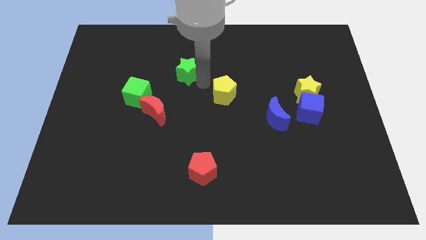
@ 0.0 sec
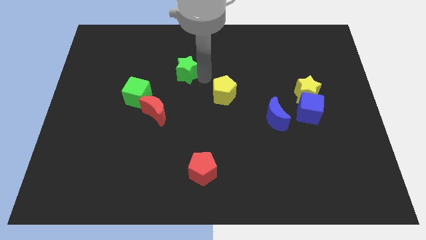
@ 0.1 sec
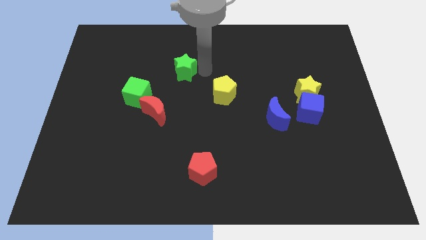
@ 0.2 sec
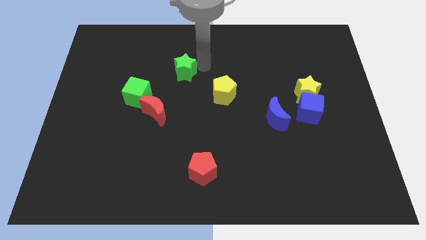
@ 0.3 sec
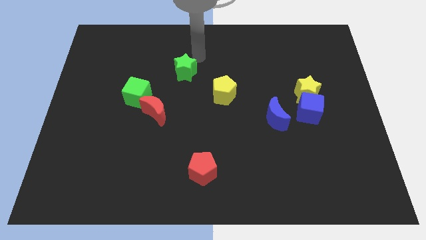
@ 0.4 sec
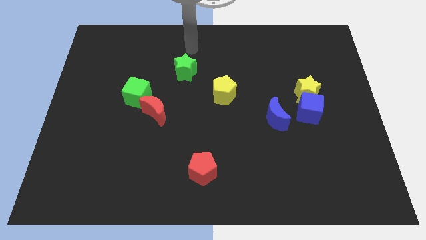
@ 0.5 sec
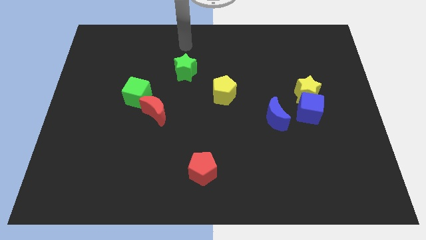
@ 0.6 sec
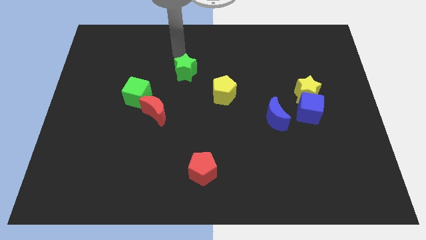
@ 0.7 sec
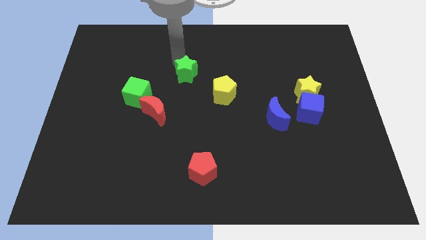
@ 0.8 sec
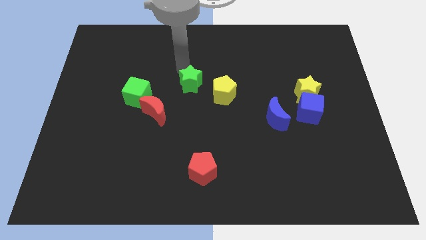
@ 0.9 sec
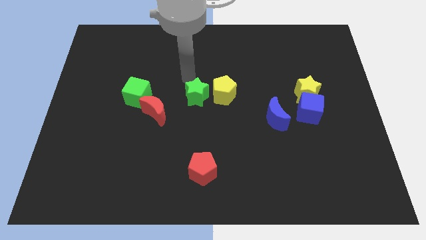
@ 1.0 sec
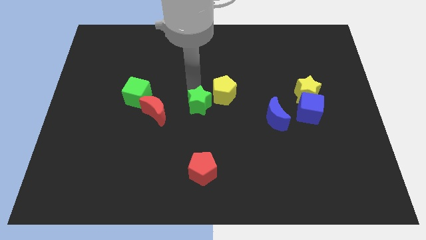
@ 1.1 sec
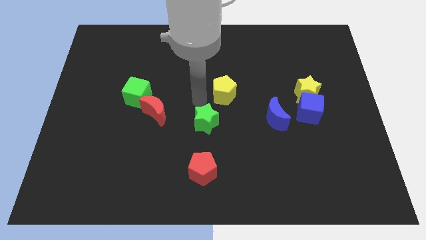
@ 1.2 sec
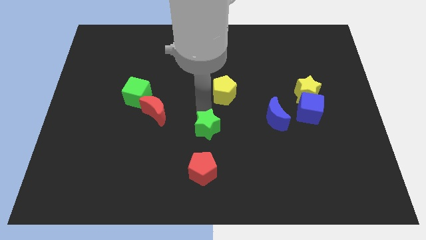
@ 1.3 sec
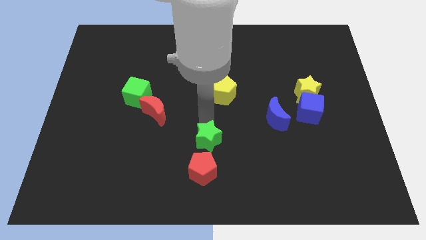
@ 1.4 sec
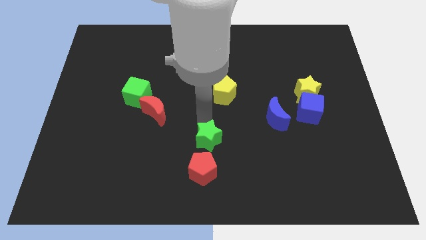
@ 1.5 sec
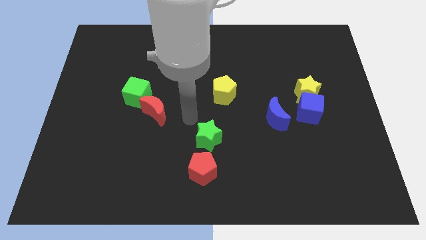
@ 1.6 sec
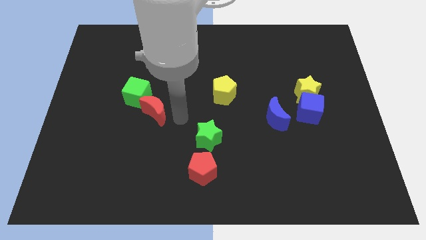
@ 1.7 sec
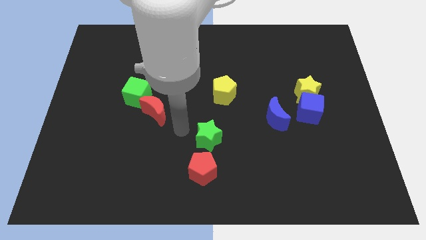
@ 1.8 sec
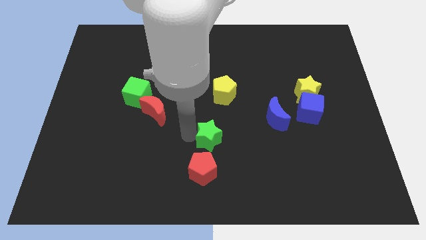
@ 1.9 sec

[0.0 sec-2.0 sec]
place green star above red pentagon

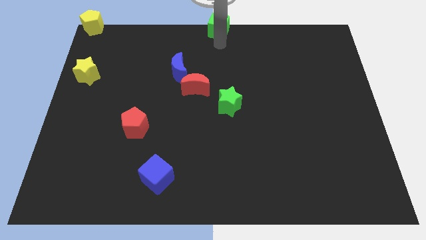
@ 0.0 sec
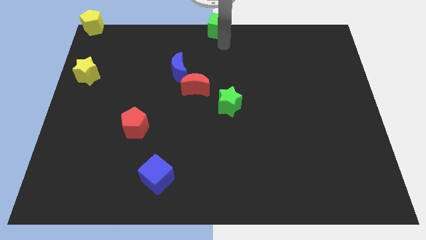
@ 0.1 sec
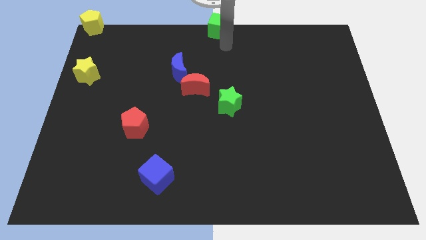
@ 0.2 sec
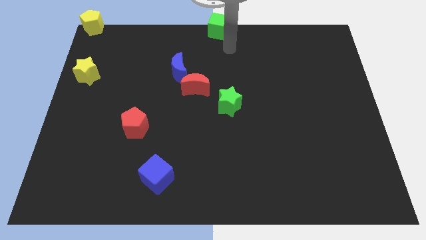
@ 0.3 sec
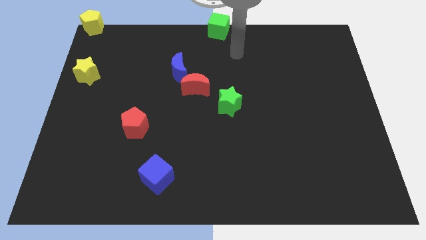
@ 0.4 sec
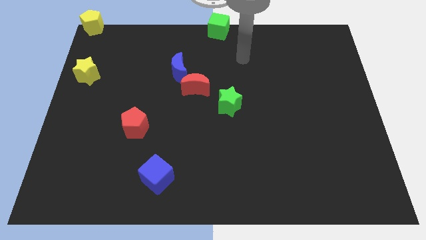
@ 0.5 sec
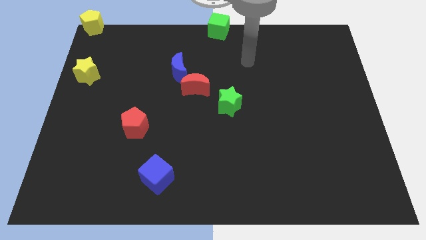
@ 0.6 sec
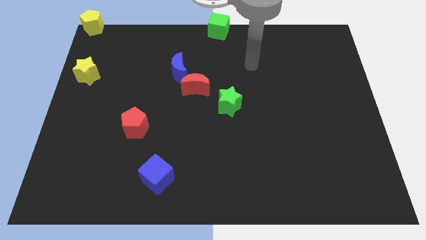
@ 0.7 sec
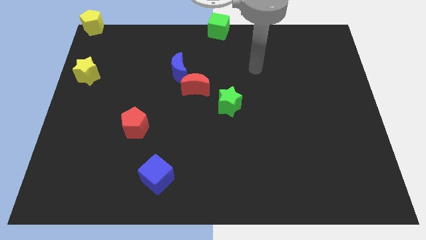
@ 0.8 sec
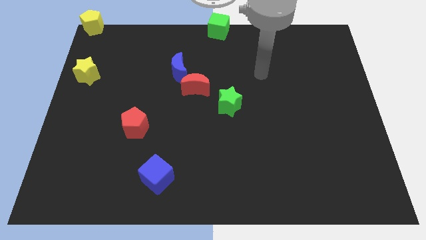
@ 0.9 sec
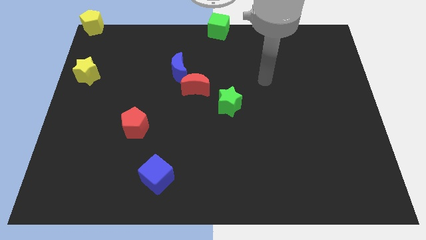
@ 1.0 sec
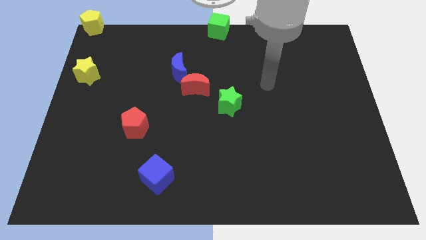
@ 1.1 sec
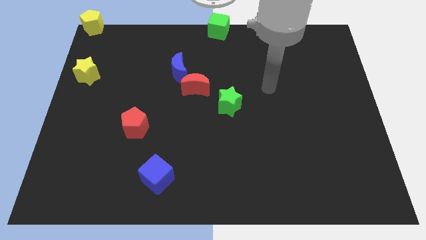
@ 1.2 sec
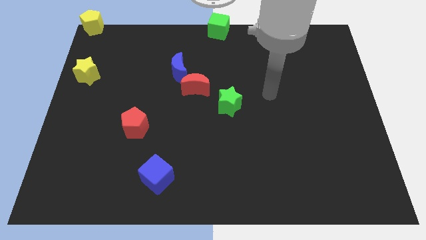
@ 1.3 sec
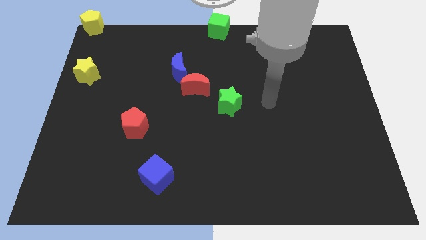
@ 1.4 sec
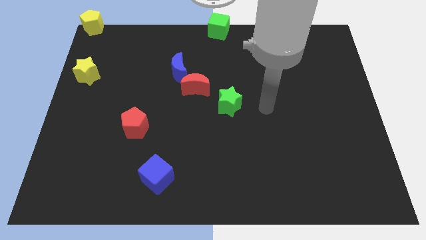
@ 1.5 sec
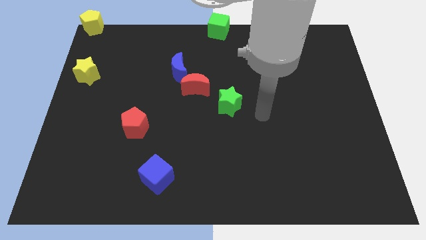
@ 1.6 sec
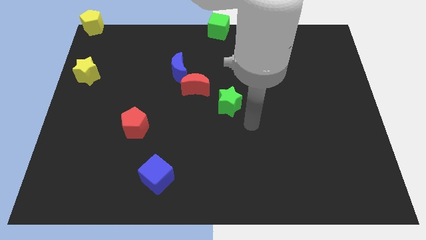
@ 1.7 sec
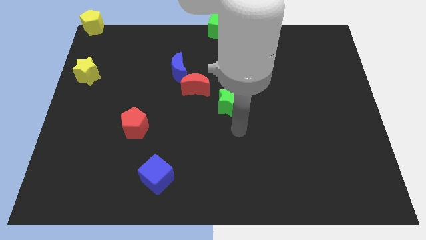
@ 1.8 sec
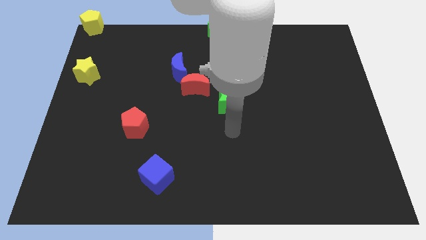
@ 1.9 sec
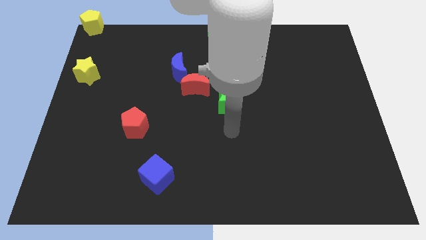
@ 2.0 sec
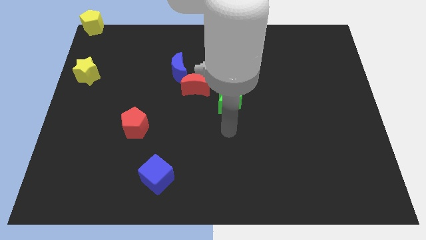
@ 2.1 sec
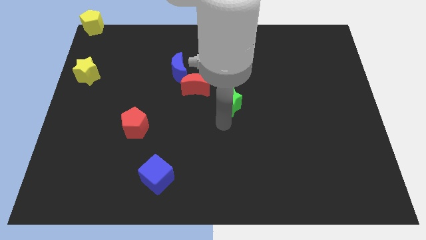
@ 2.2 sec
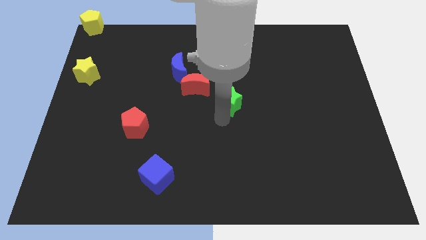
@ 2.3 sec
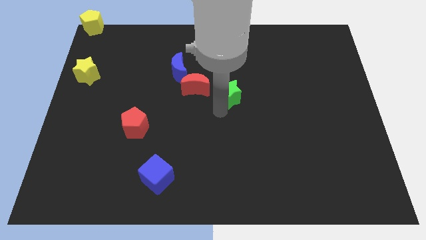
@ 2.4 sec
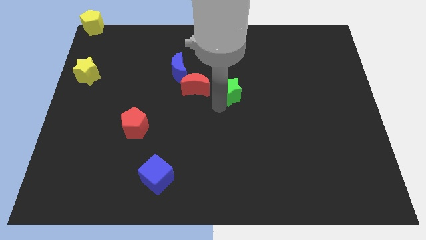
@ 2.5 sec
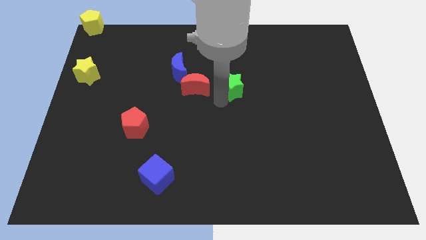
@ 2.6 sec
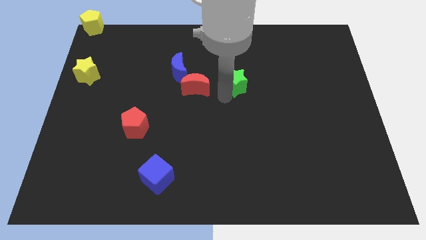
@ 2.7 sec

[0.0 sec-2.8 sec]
move the green star right to the red crescent

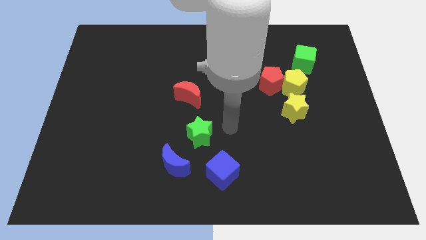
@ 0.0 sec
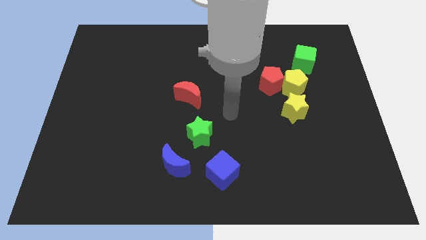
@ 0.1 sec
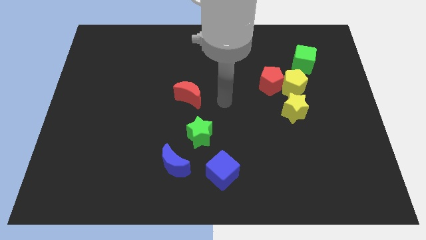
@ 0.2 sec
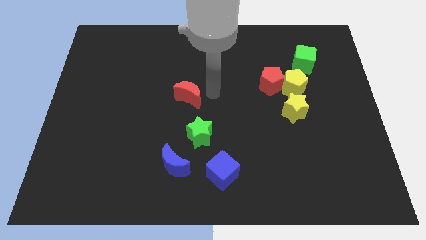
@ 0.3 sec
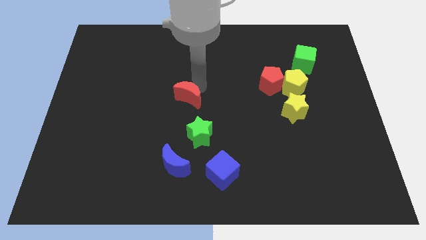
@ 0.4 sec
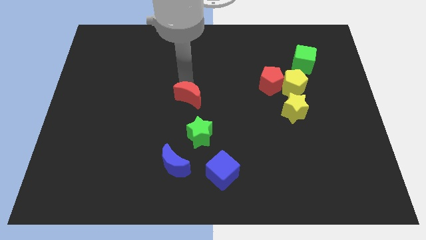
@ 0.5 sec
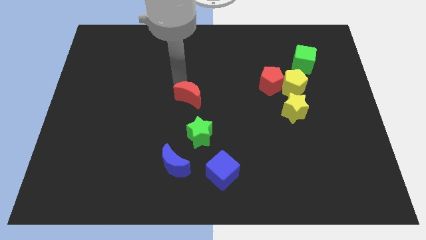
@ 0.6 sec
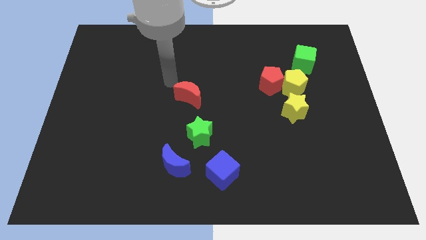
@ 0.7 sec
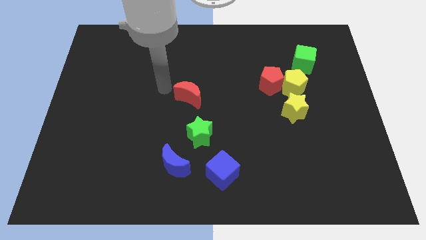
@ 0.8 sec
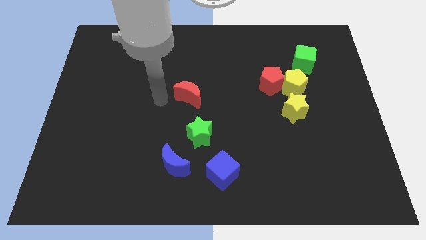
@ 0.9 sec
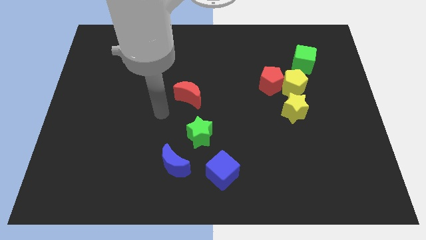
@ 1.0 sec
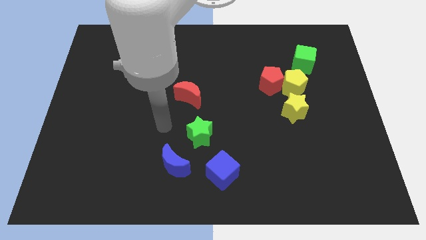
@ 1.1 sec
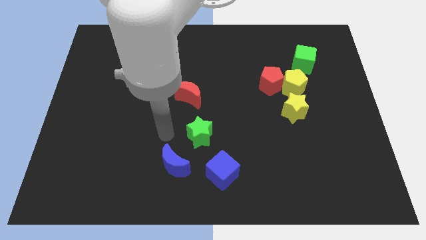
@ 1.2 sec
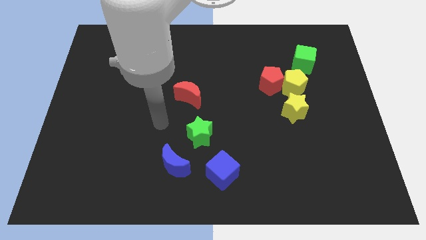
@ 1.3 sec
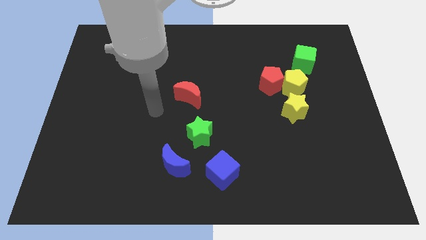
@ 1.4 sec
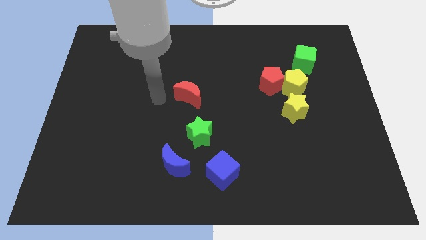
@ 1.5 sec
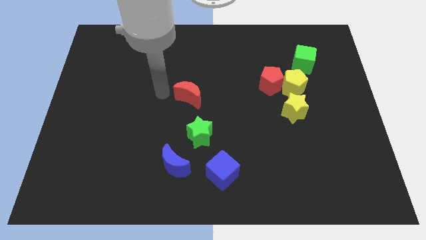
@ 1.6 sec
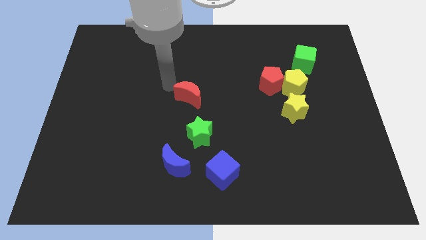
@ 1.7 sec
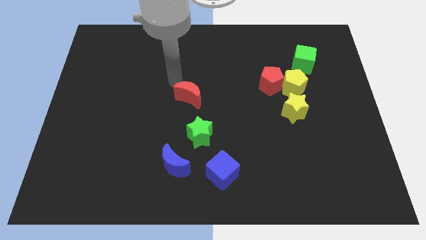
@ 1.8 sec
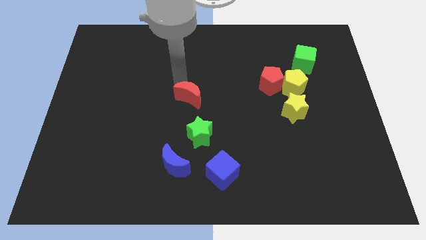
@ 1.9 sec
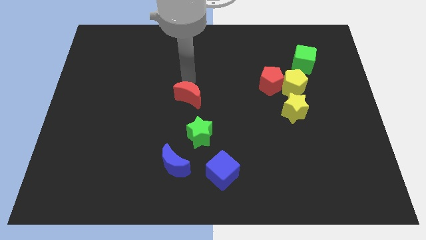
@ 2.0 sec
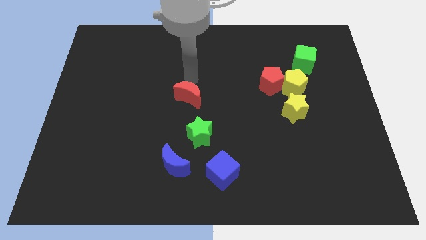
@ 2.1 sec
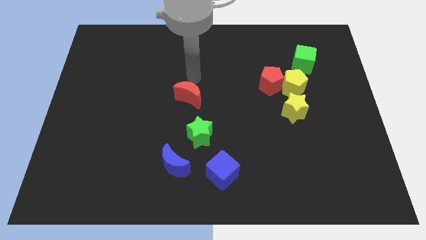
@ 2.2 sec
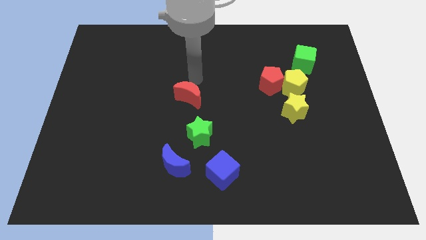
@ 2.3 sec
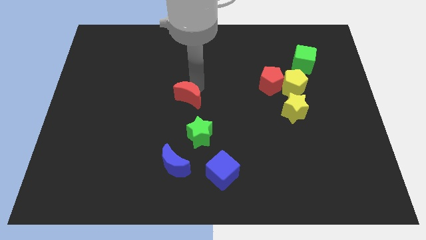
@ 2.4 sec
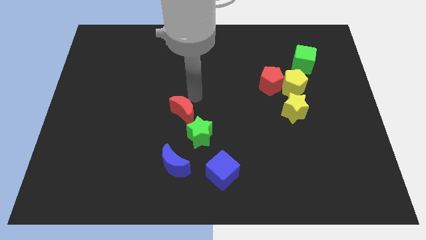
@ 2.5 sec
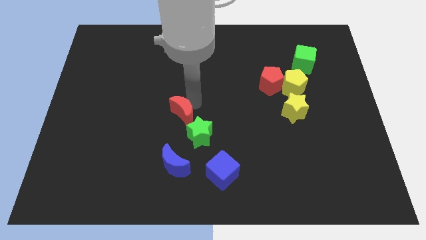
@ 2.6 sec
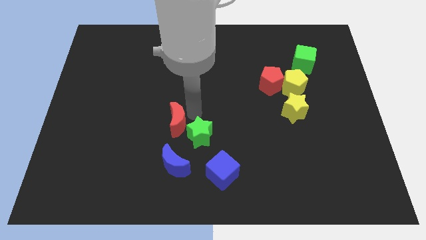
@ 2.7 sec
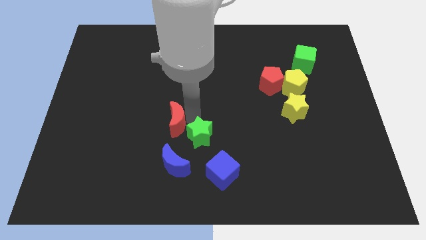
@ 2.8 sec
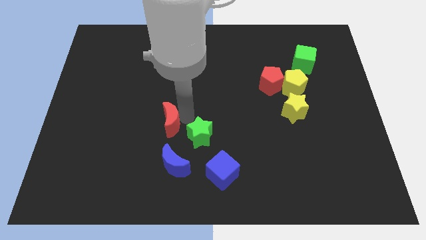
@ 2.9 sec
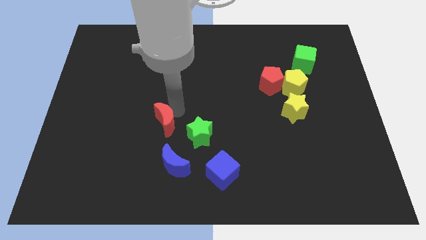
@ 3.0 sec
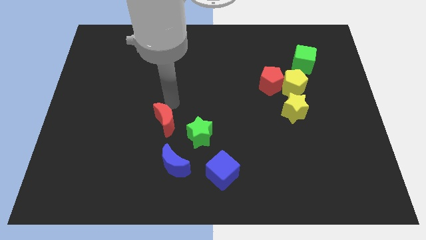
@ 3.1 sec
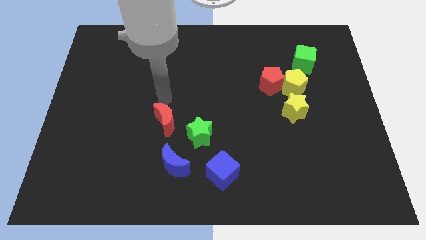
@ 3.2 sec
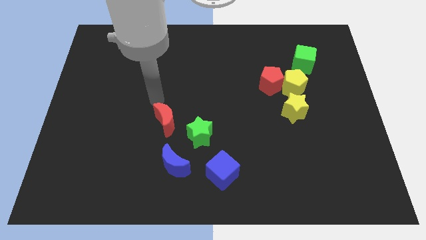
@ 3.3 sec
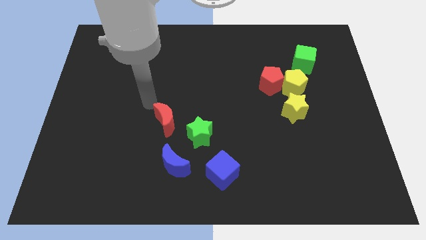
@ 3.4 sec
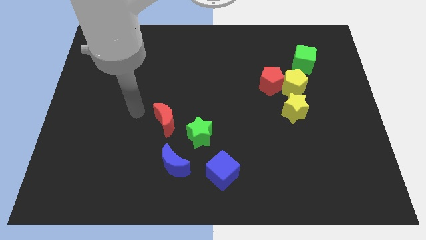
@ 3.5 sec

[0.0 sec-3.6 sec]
push the red crescent near the green star

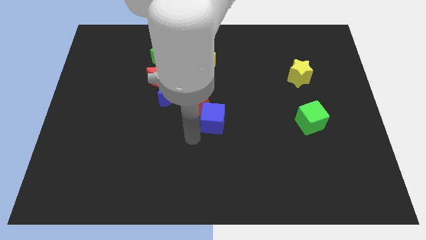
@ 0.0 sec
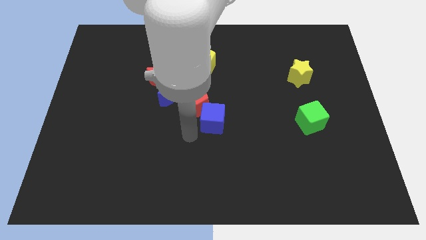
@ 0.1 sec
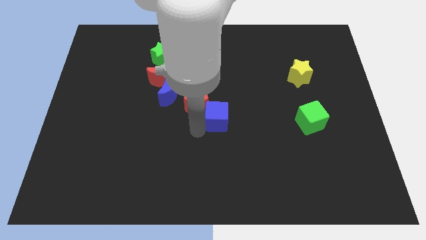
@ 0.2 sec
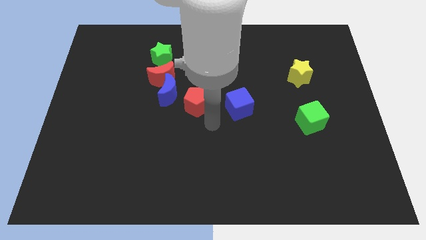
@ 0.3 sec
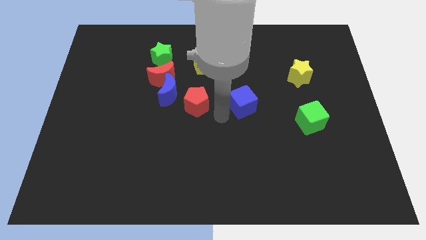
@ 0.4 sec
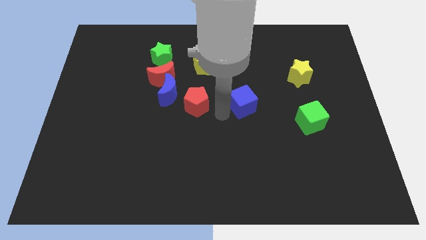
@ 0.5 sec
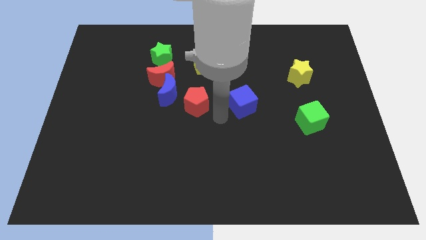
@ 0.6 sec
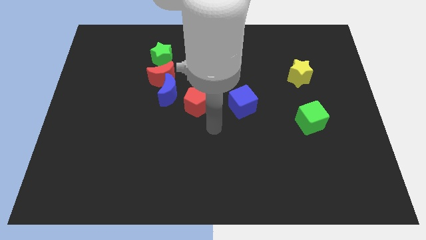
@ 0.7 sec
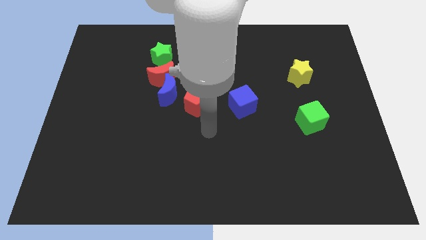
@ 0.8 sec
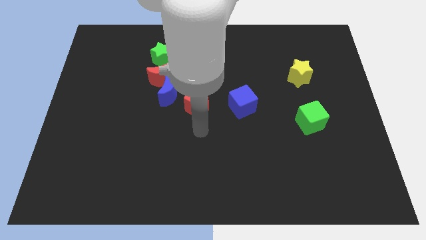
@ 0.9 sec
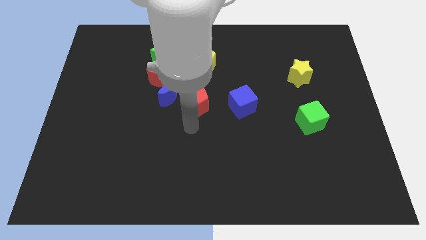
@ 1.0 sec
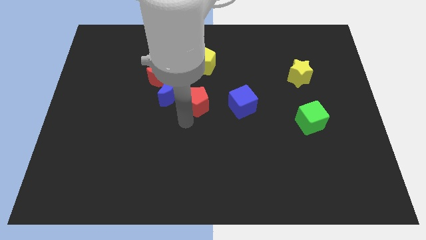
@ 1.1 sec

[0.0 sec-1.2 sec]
move the blue cube to the right of the red pentagon
